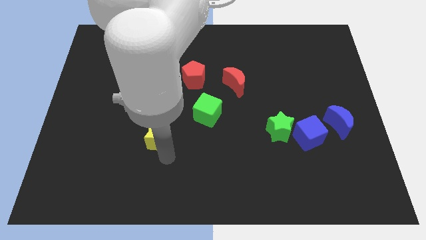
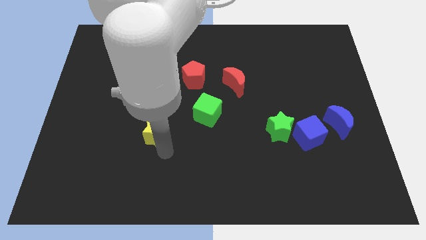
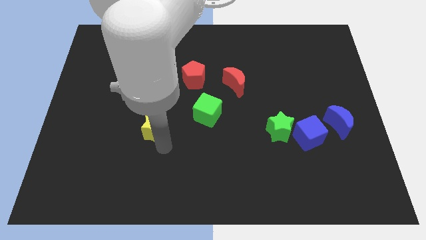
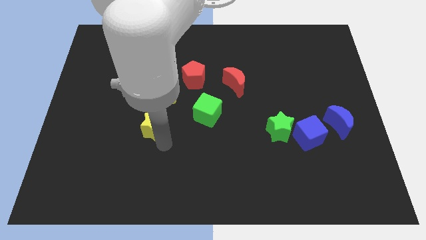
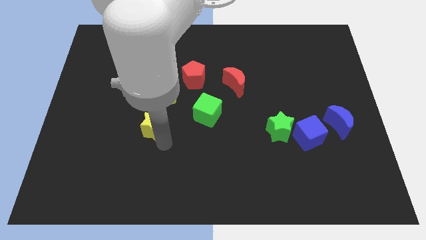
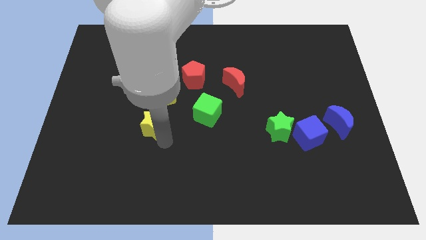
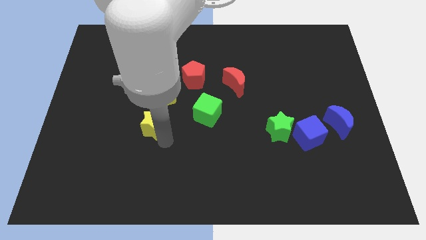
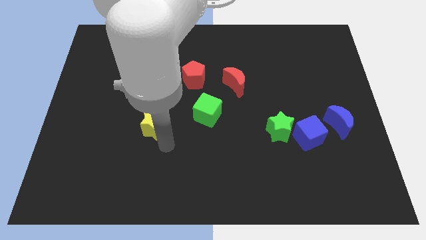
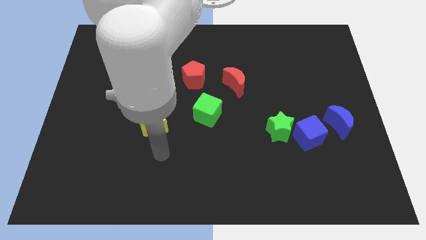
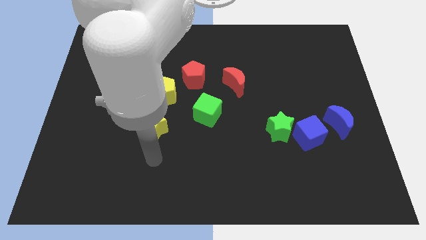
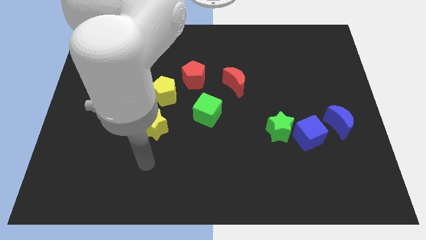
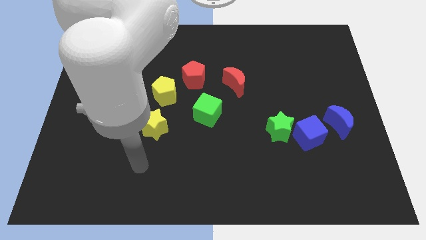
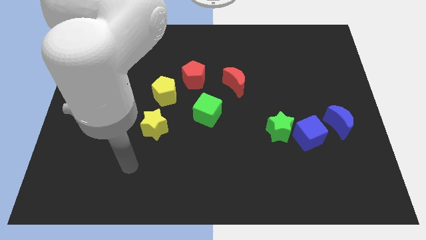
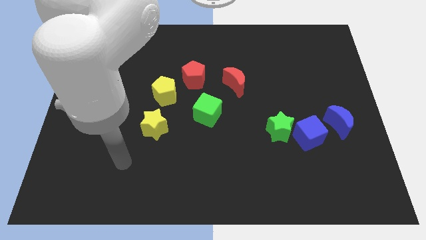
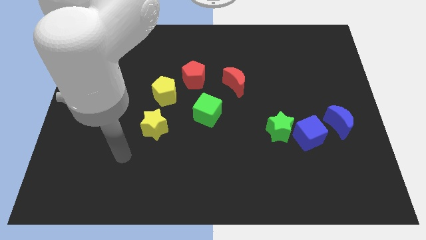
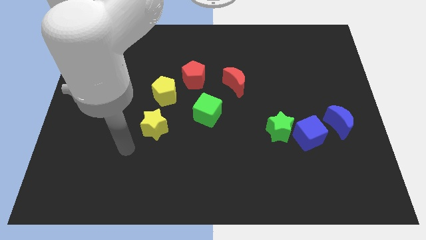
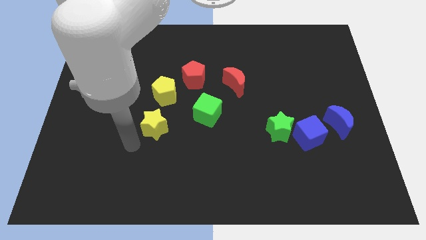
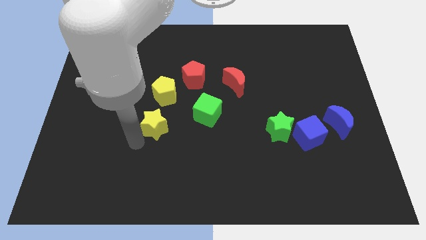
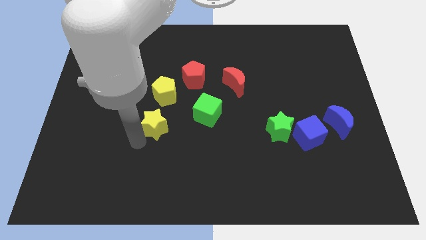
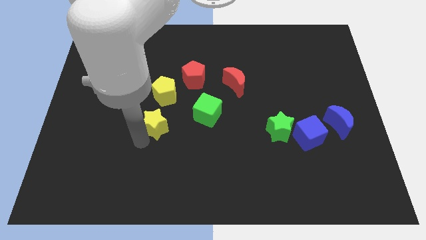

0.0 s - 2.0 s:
place the yellow star below the yellow pentagon

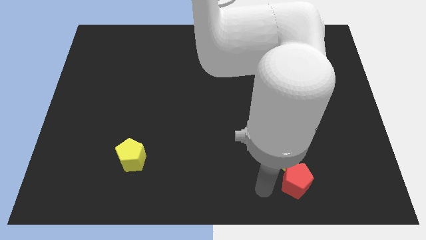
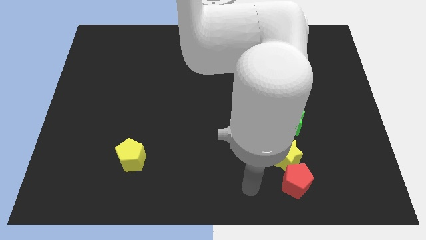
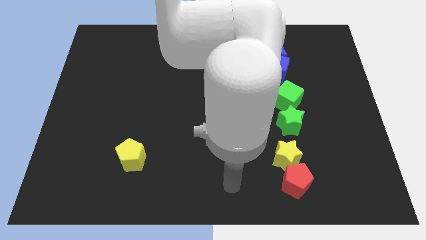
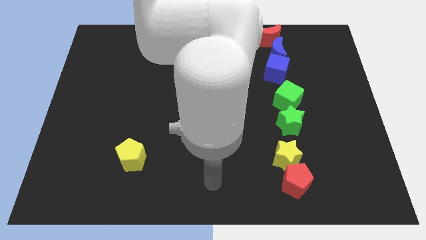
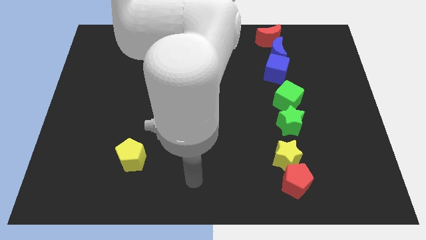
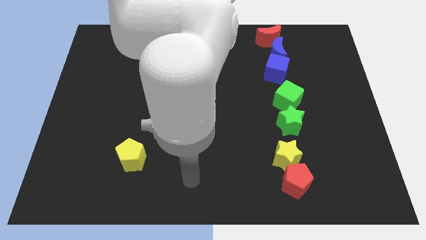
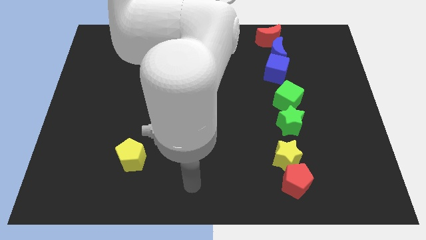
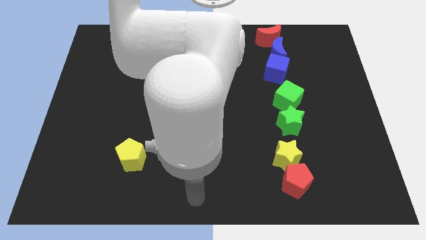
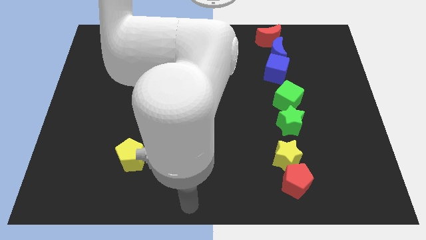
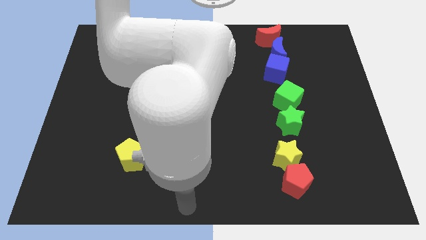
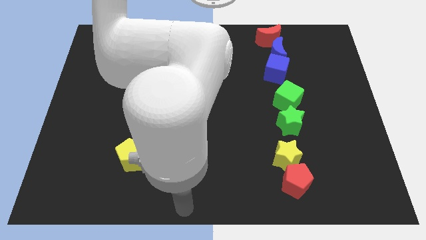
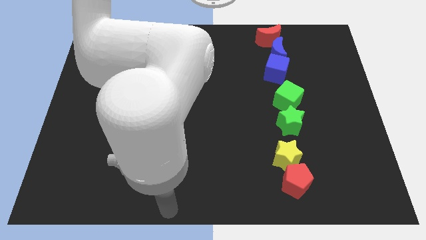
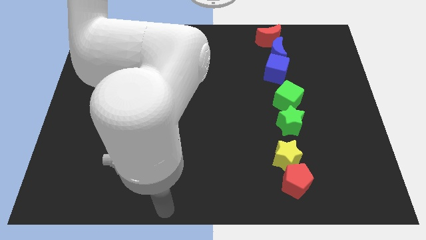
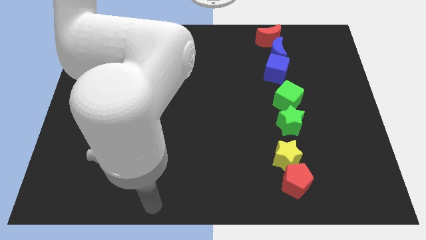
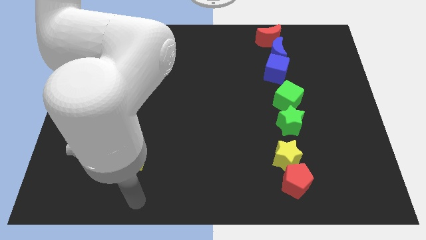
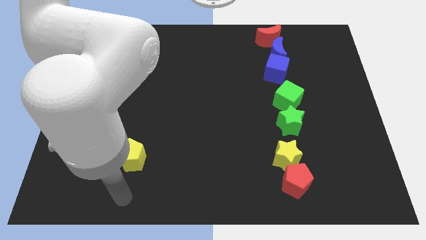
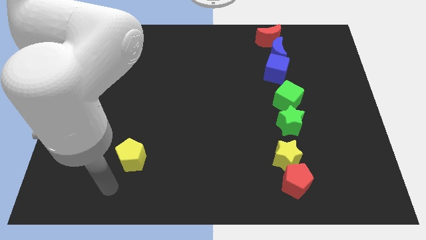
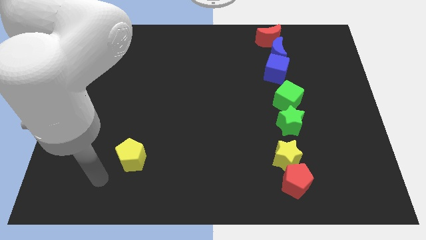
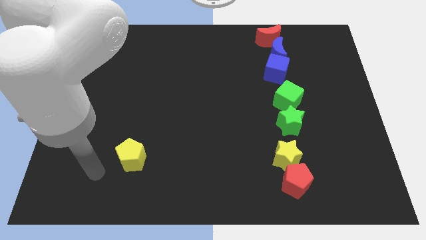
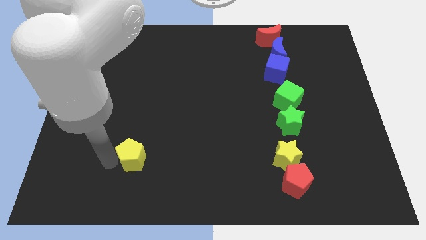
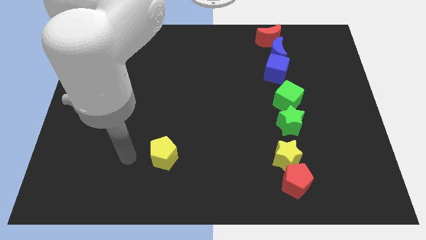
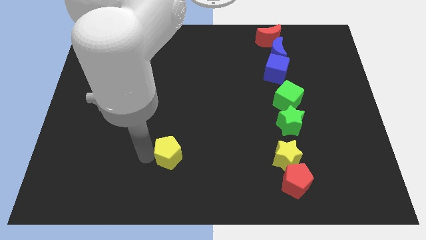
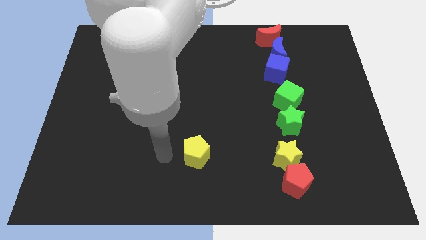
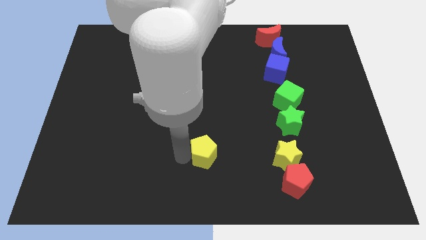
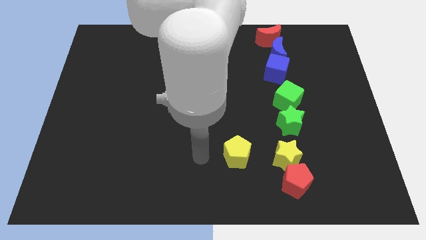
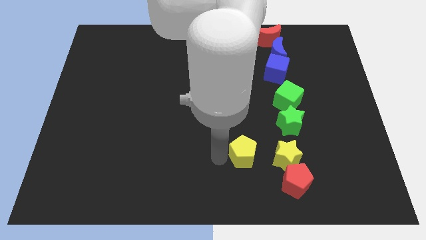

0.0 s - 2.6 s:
move the yellow pentagon towards yellow star

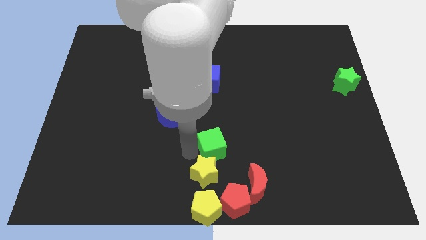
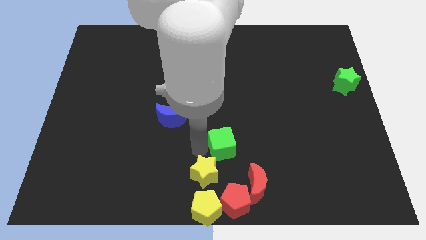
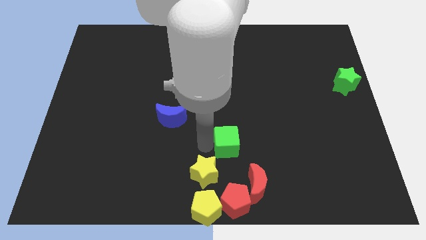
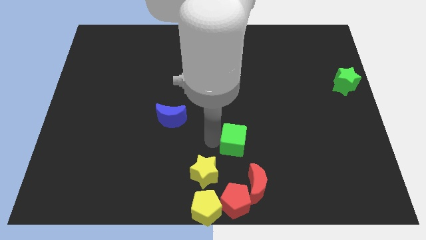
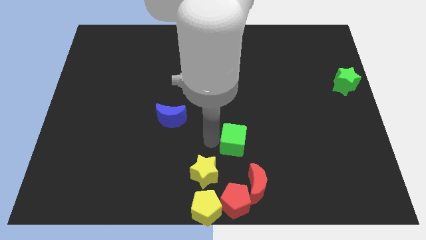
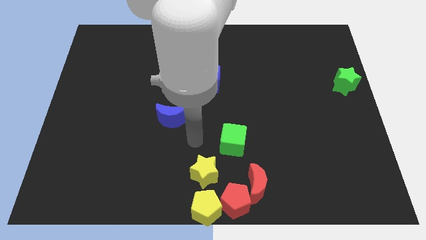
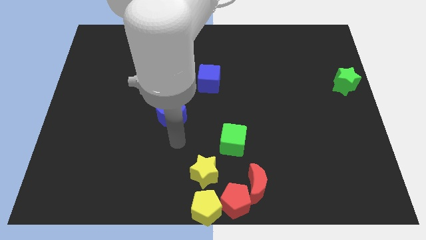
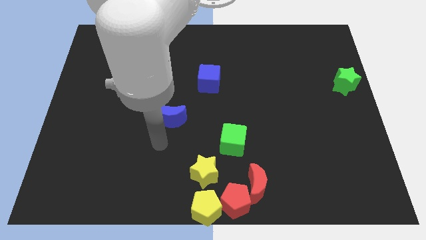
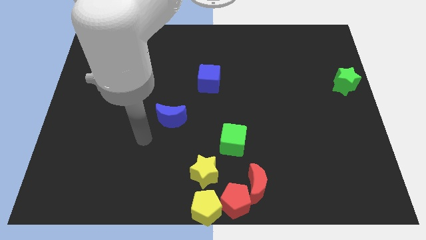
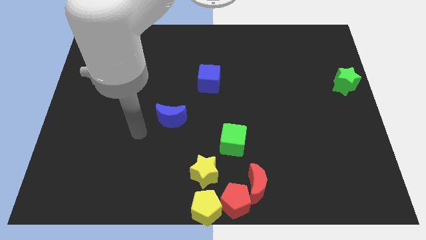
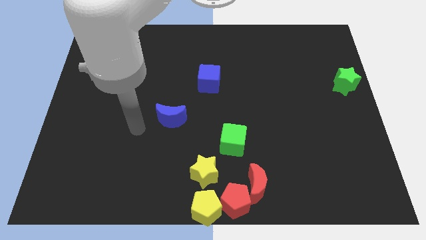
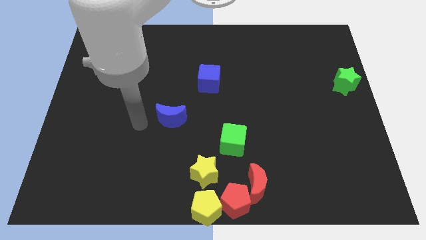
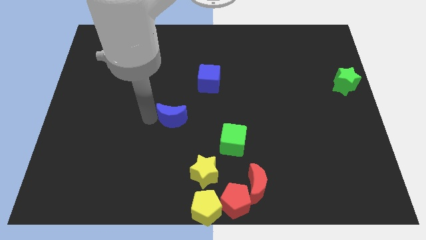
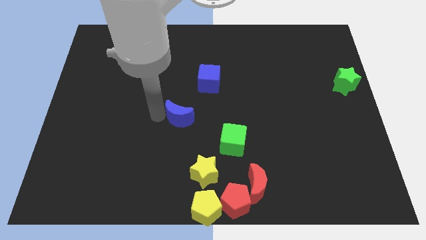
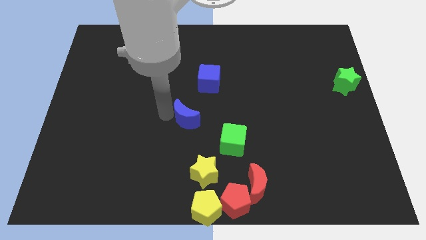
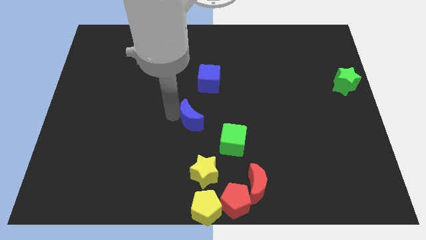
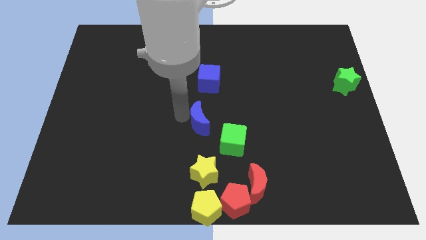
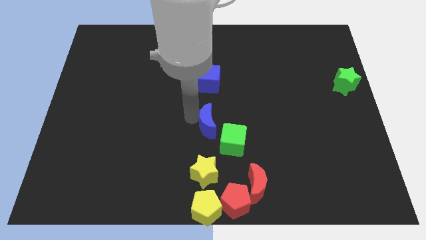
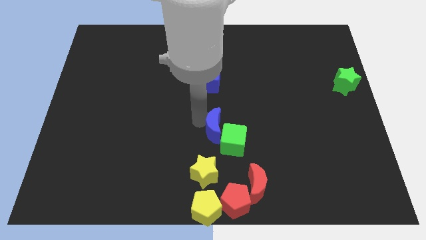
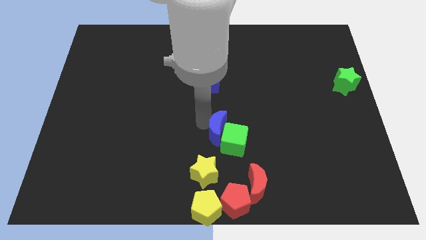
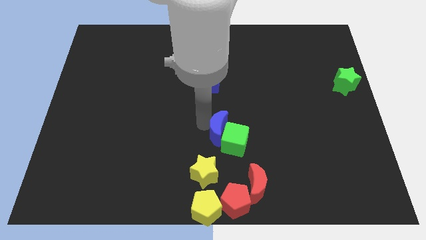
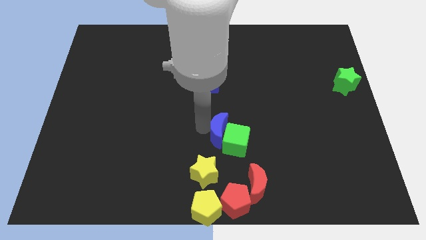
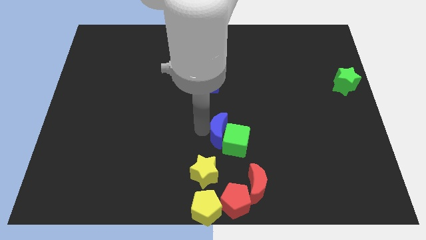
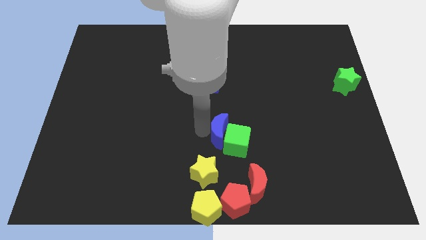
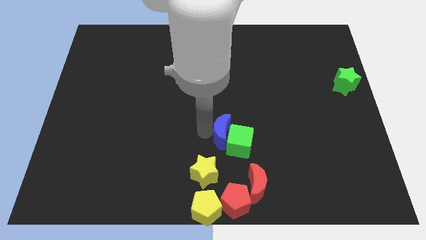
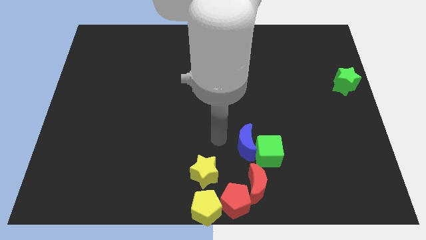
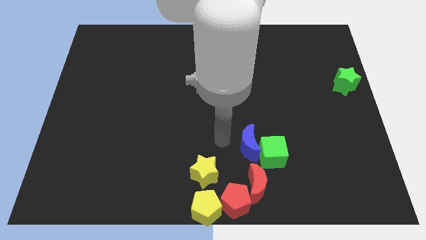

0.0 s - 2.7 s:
push the blue moon into the green cube

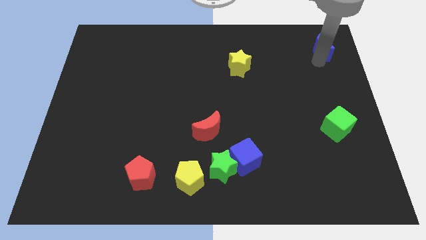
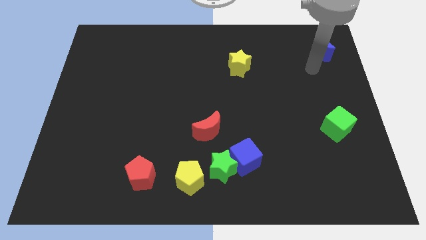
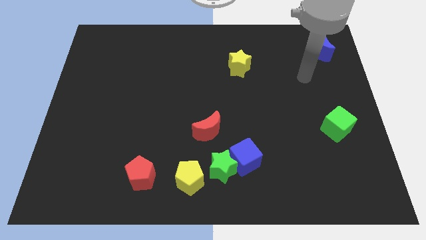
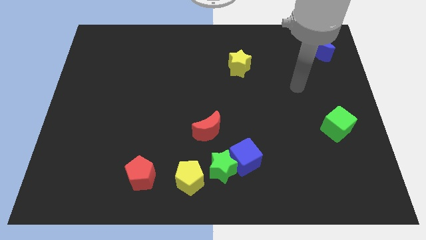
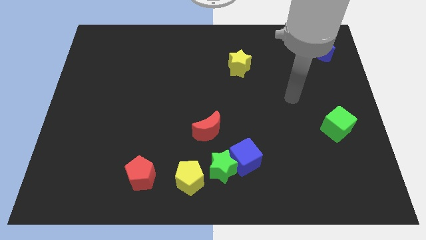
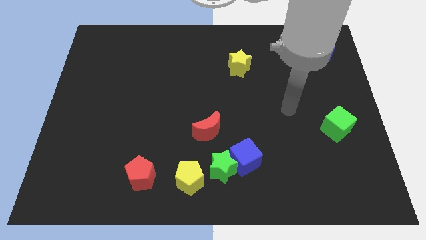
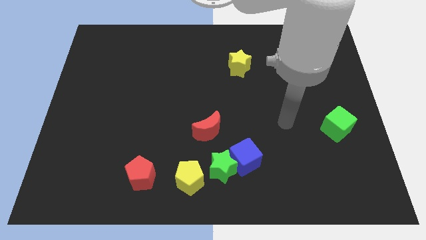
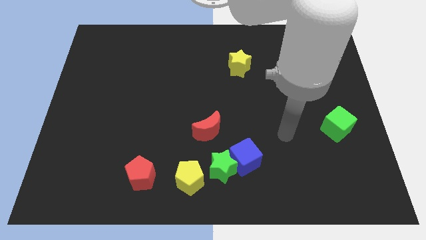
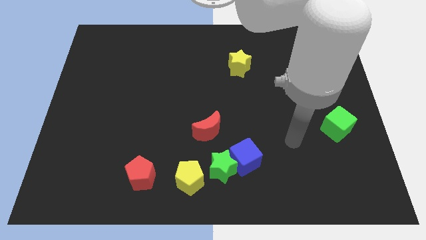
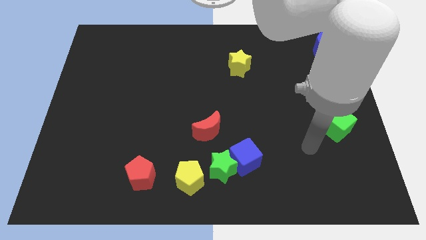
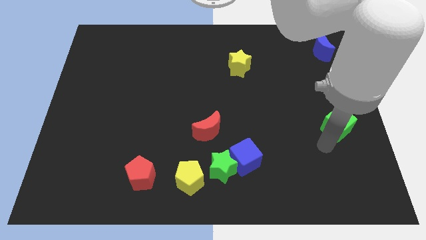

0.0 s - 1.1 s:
move your arm below the green cube

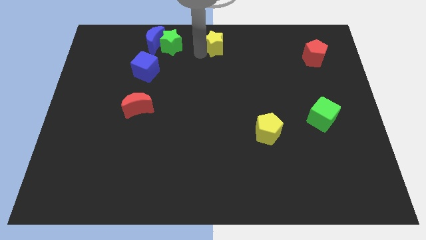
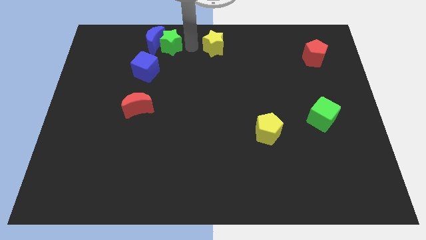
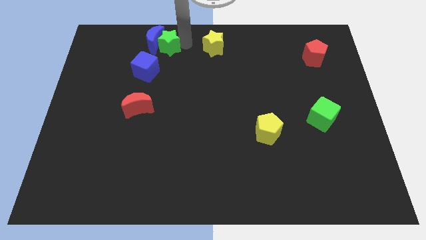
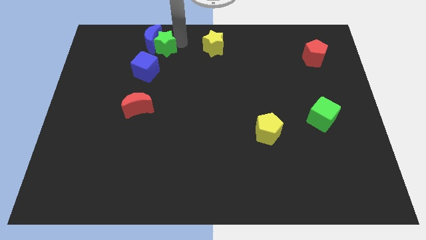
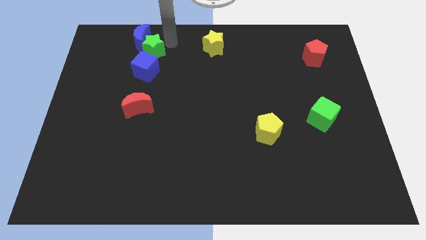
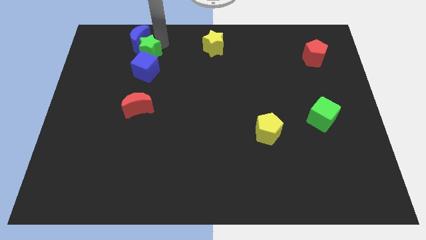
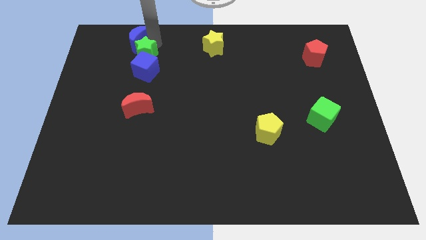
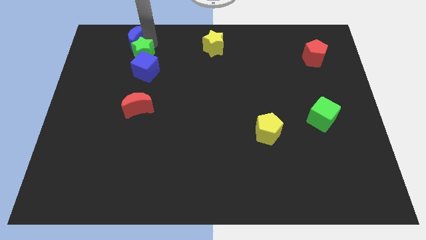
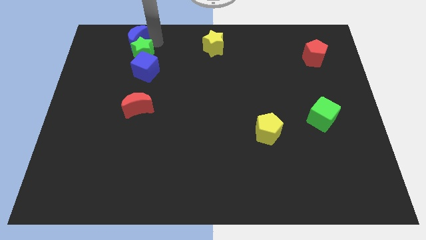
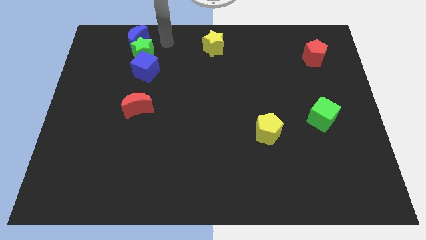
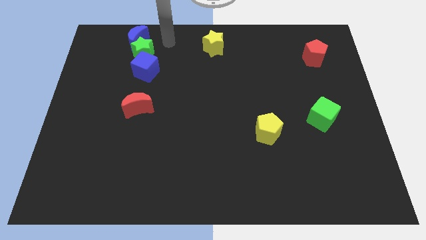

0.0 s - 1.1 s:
place the green star in between the blue crescent and the blue cube
